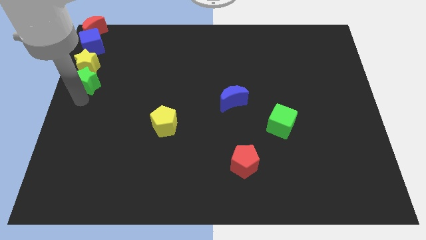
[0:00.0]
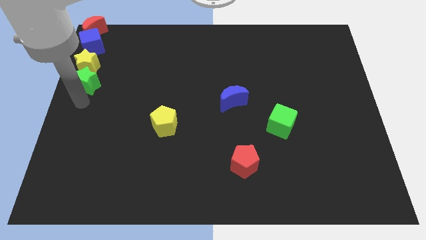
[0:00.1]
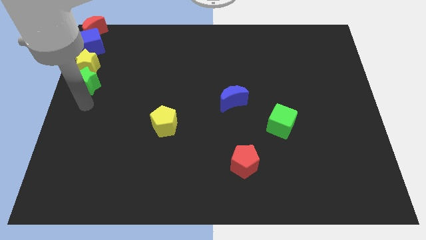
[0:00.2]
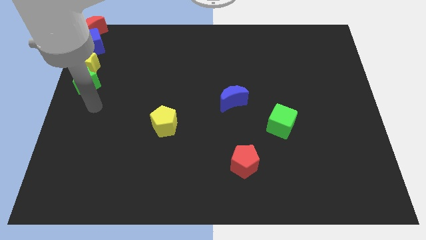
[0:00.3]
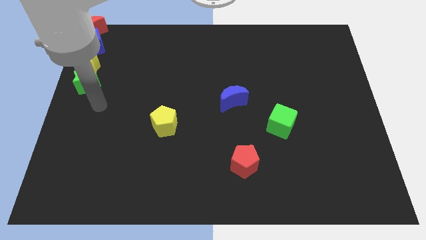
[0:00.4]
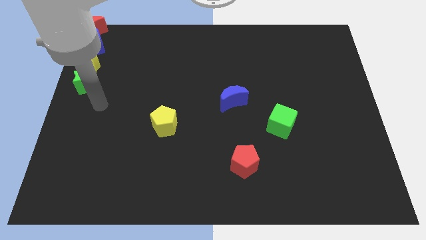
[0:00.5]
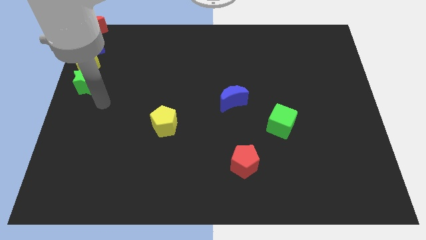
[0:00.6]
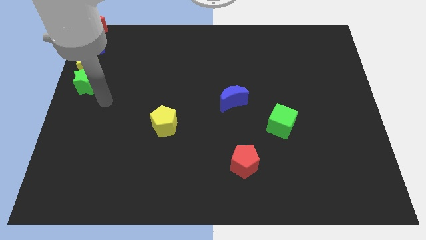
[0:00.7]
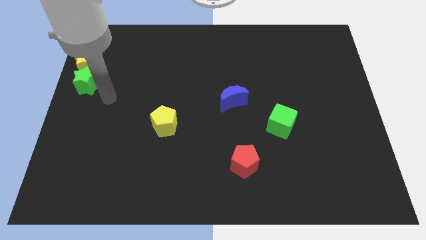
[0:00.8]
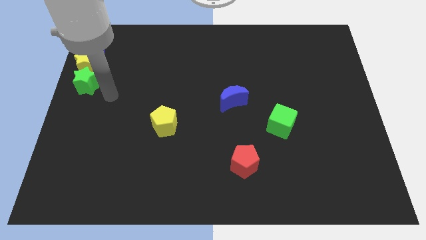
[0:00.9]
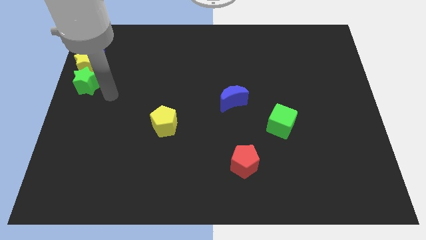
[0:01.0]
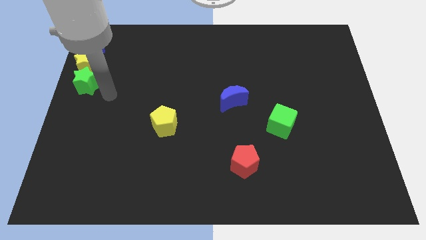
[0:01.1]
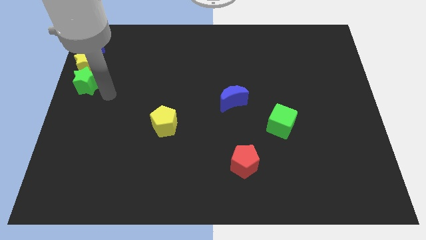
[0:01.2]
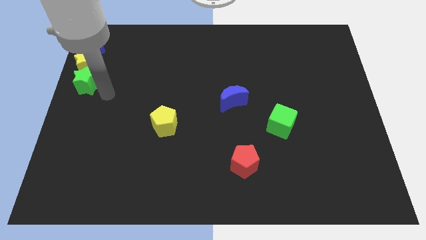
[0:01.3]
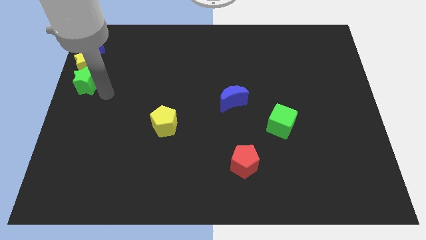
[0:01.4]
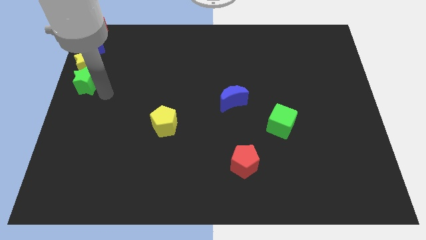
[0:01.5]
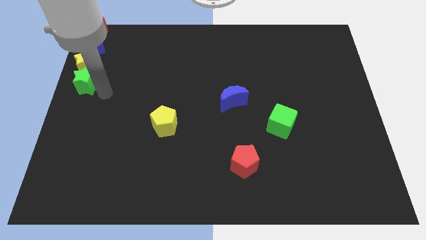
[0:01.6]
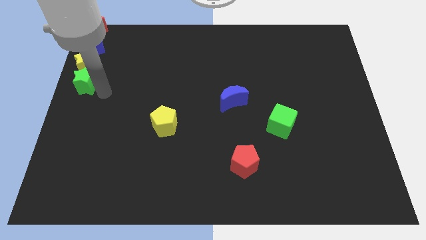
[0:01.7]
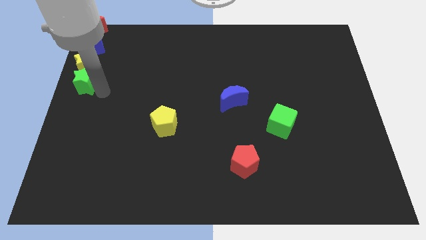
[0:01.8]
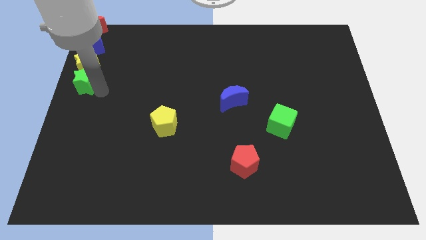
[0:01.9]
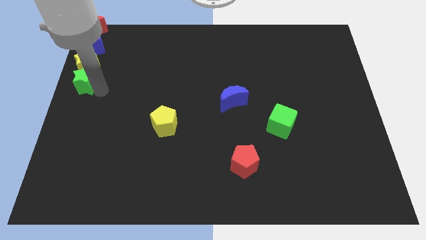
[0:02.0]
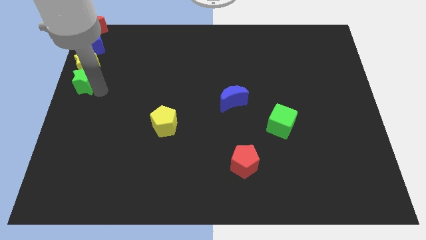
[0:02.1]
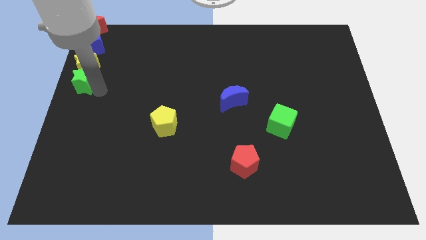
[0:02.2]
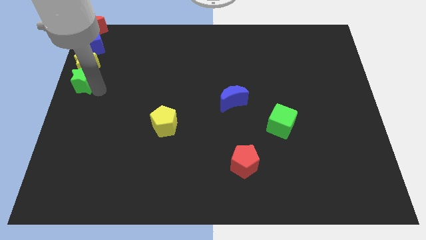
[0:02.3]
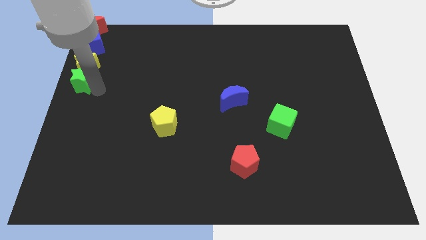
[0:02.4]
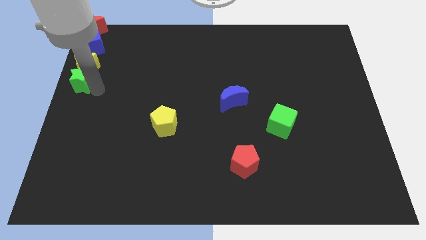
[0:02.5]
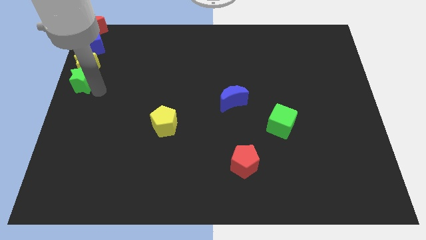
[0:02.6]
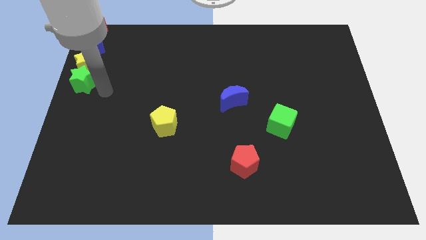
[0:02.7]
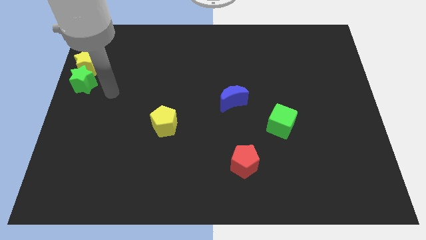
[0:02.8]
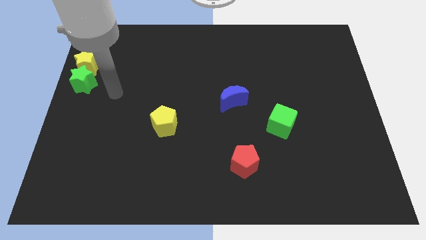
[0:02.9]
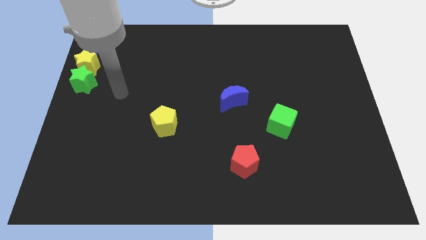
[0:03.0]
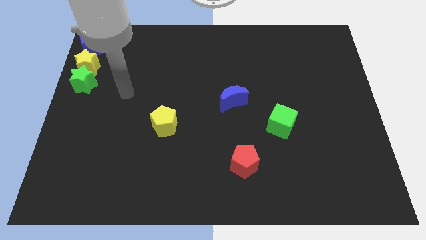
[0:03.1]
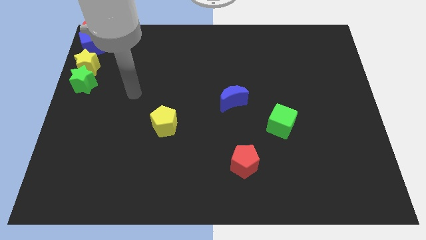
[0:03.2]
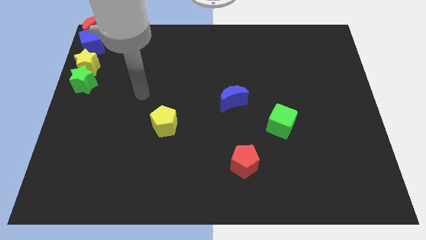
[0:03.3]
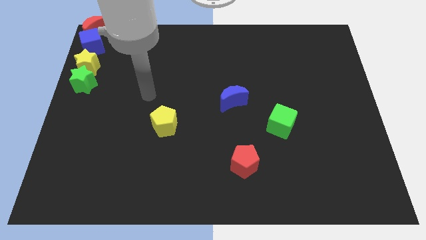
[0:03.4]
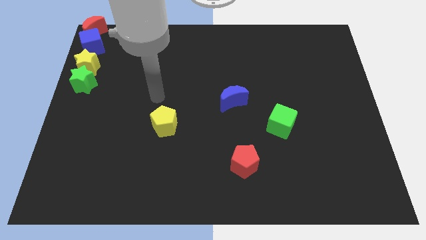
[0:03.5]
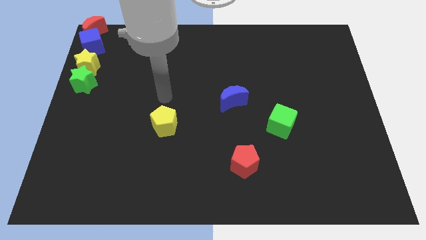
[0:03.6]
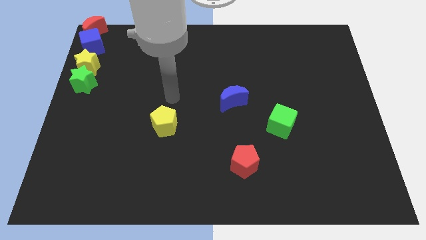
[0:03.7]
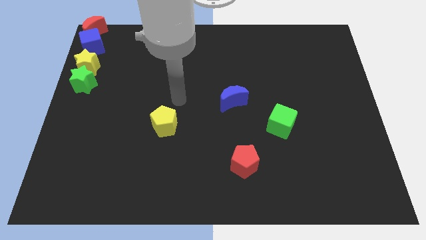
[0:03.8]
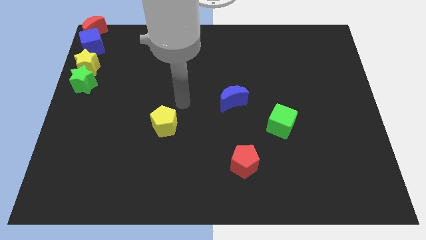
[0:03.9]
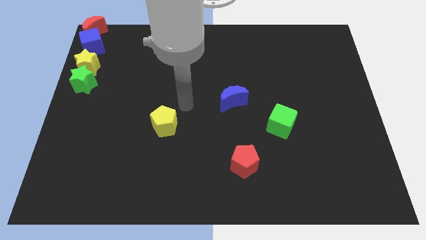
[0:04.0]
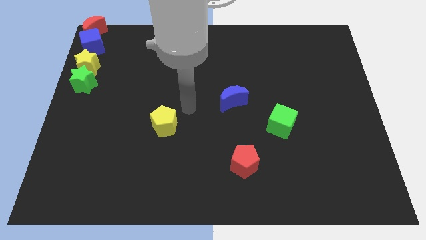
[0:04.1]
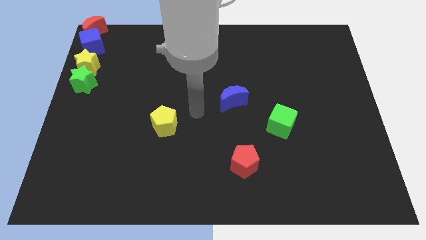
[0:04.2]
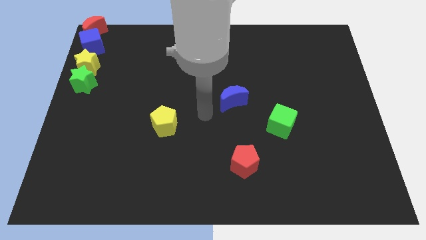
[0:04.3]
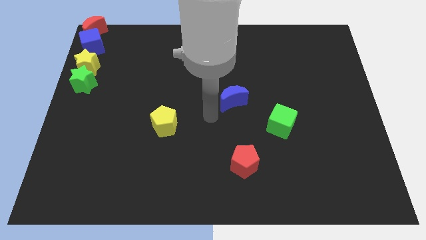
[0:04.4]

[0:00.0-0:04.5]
place the arm in between the yellow pentagon and blue moon

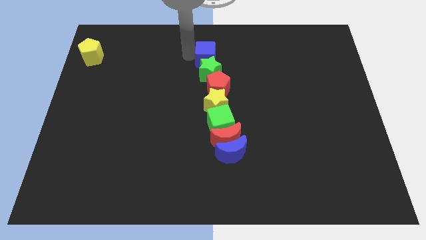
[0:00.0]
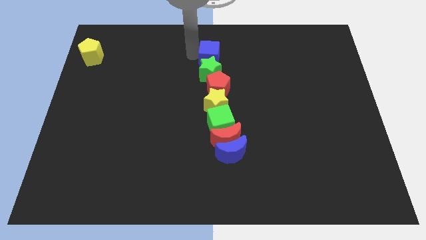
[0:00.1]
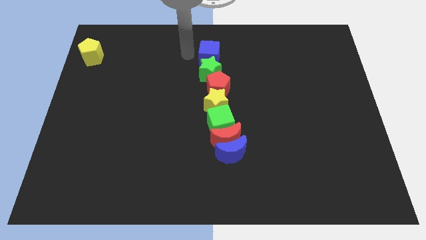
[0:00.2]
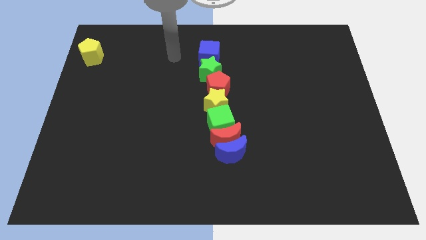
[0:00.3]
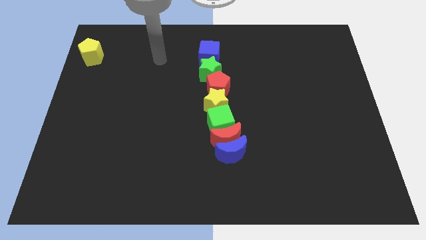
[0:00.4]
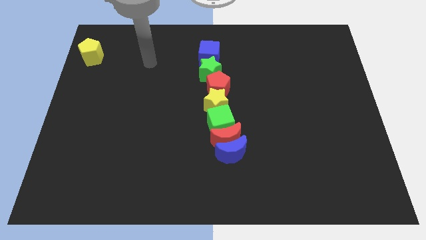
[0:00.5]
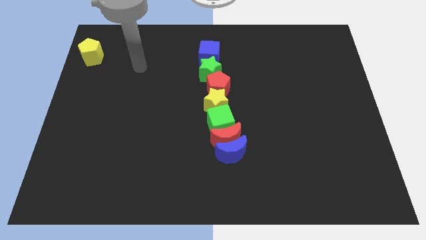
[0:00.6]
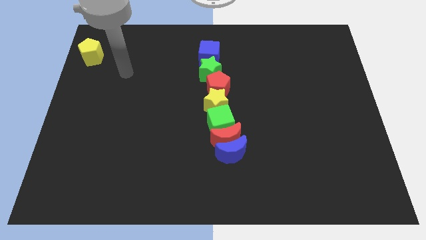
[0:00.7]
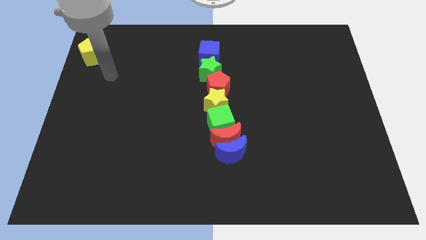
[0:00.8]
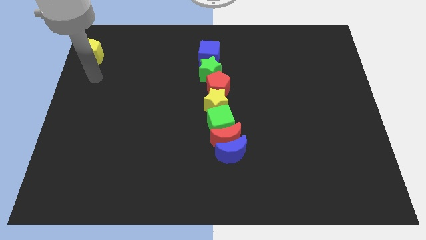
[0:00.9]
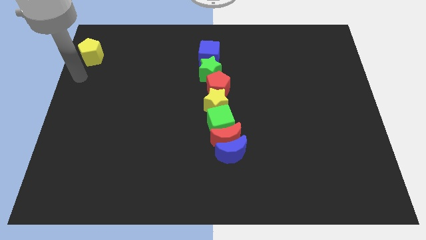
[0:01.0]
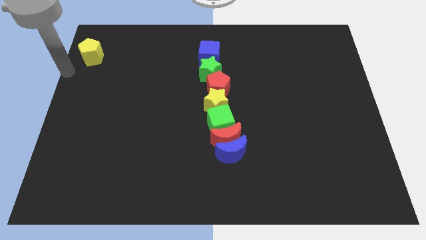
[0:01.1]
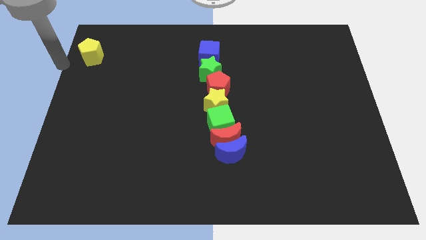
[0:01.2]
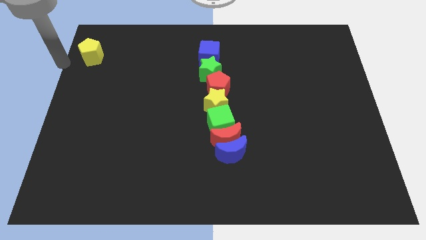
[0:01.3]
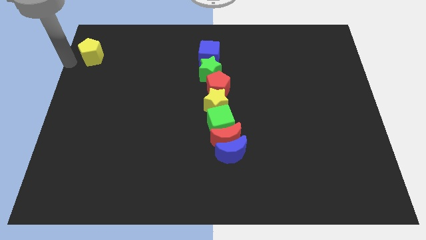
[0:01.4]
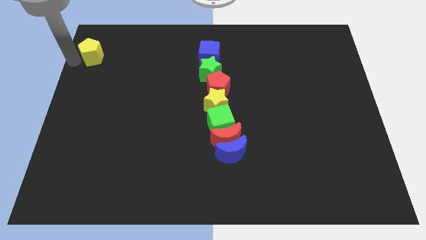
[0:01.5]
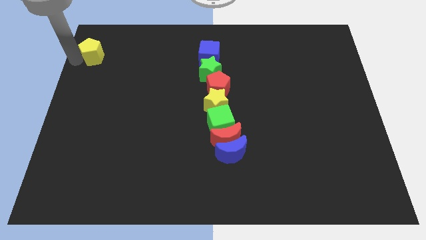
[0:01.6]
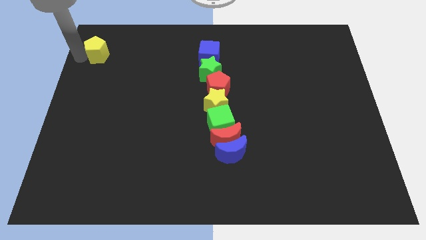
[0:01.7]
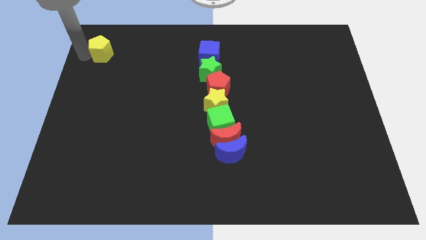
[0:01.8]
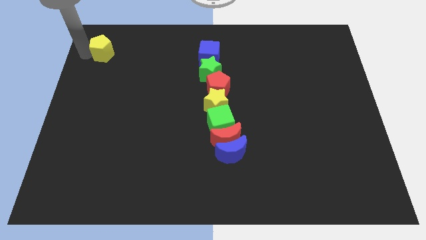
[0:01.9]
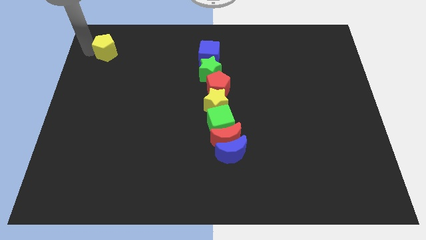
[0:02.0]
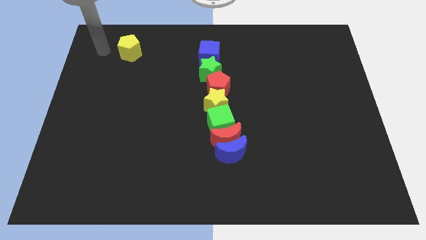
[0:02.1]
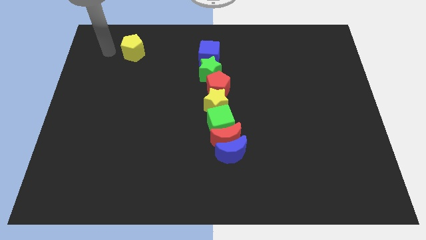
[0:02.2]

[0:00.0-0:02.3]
move the yellow pentagon to the left of blue cube

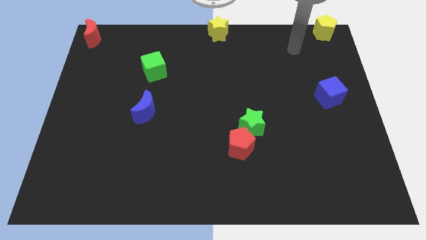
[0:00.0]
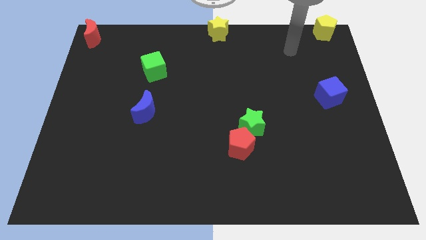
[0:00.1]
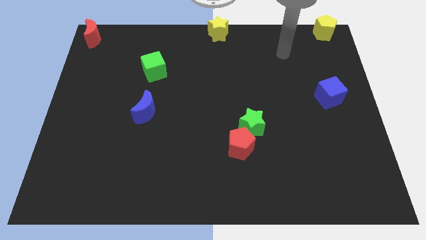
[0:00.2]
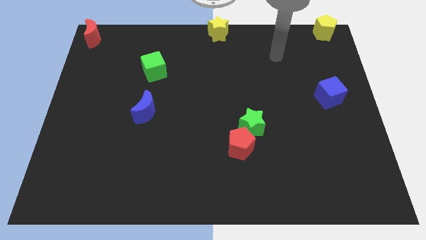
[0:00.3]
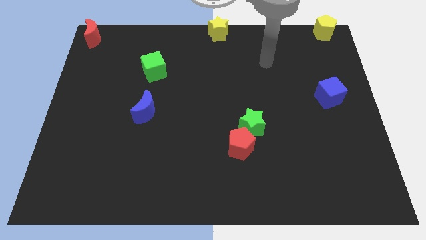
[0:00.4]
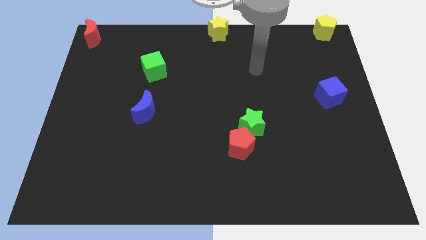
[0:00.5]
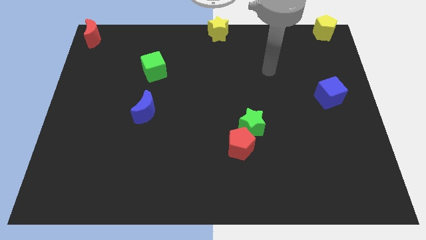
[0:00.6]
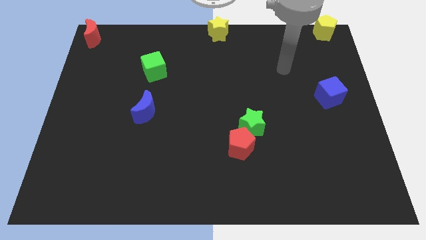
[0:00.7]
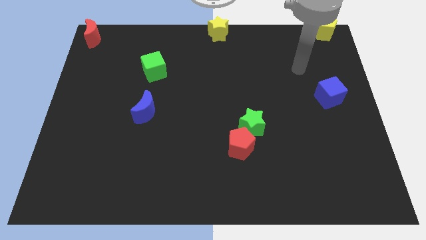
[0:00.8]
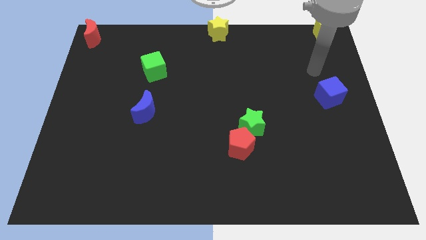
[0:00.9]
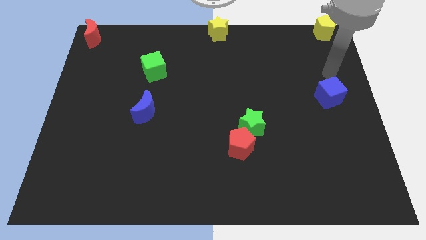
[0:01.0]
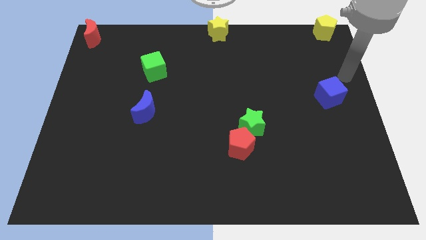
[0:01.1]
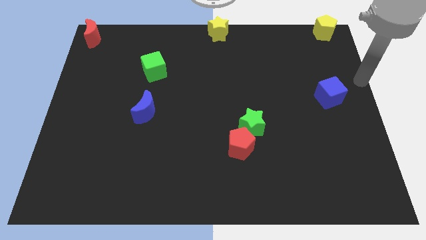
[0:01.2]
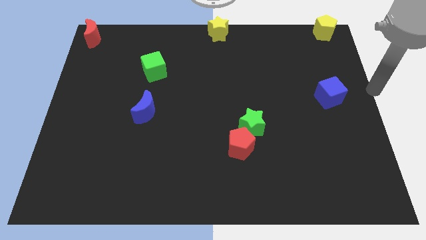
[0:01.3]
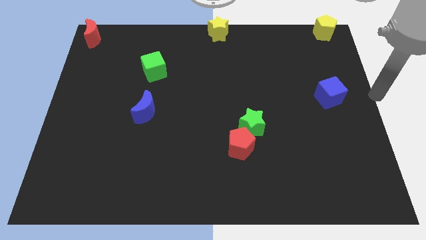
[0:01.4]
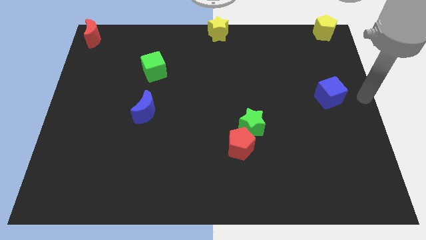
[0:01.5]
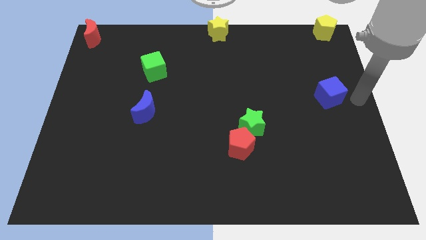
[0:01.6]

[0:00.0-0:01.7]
place your arm at the right center of the board

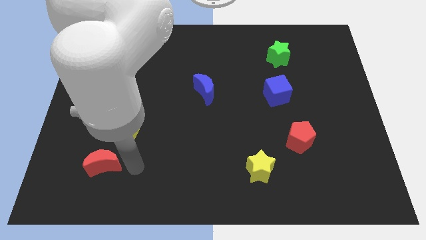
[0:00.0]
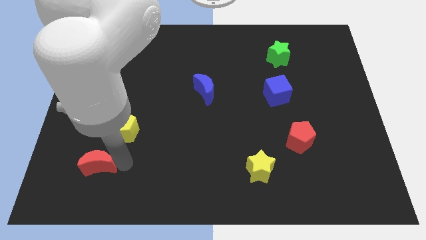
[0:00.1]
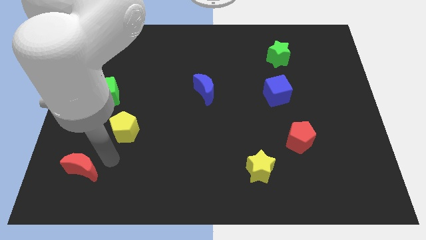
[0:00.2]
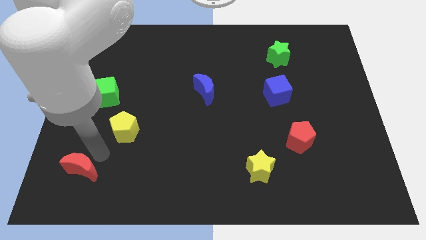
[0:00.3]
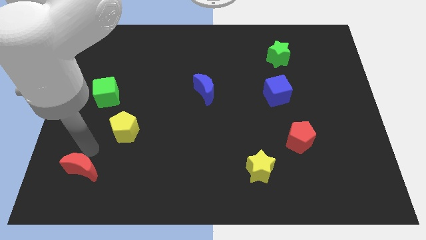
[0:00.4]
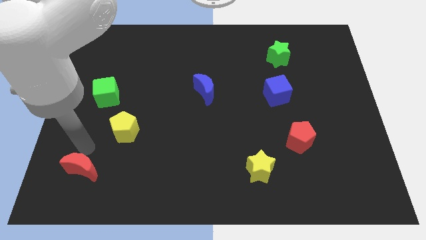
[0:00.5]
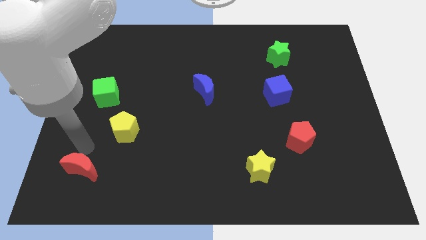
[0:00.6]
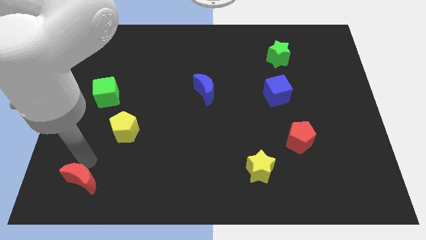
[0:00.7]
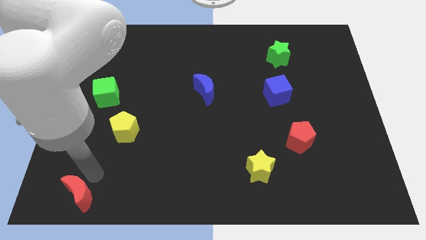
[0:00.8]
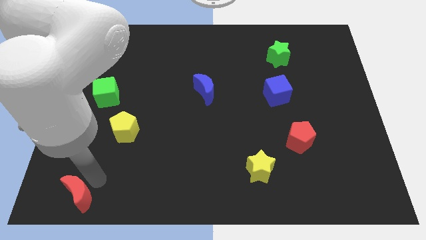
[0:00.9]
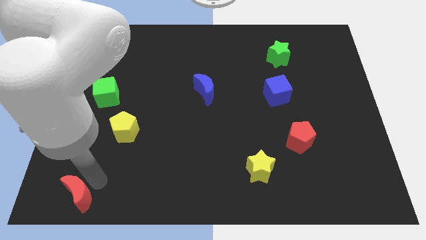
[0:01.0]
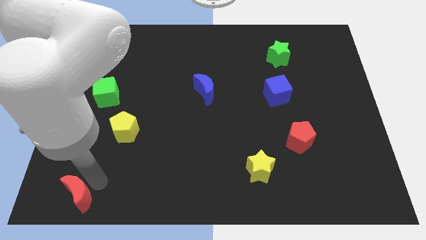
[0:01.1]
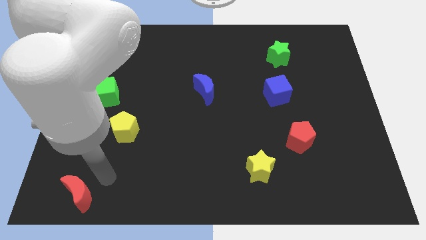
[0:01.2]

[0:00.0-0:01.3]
move red moon slightly down
